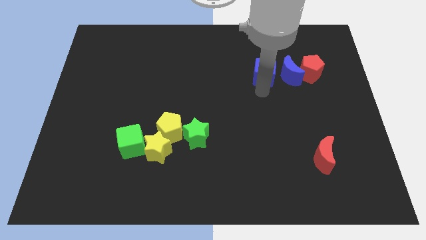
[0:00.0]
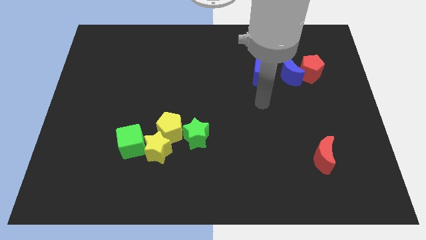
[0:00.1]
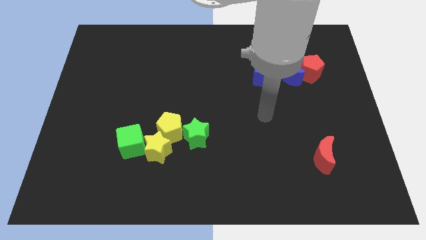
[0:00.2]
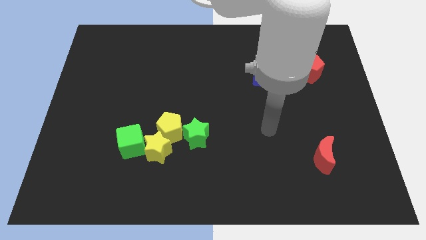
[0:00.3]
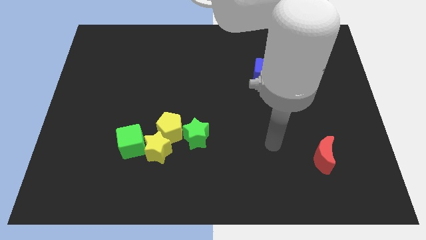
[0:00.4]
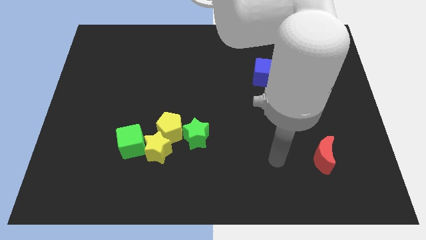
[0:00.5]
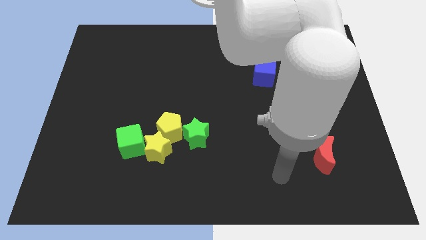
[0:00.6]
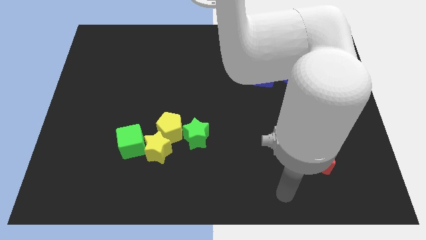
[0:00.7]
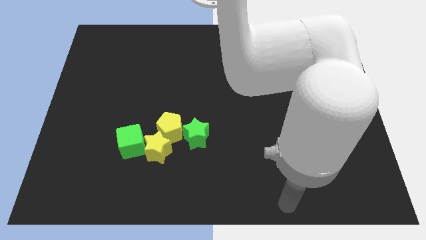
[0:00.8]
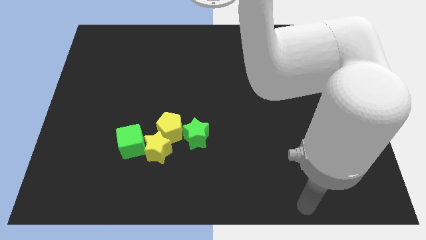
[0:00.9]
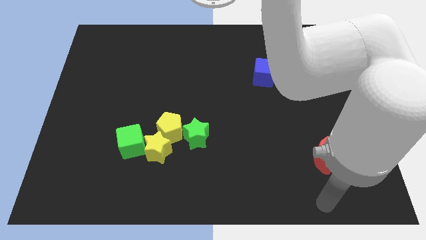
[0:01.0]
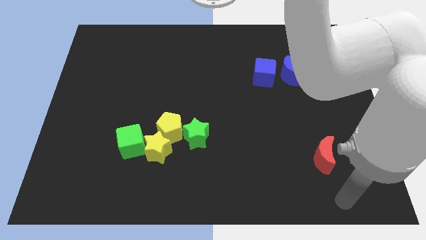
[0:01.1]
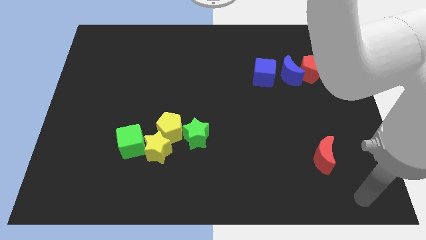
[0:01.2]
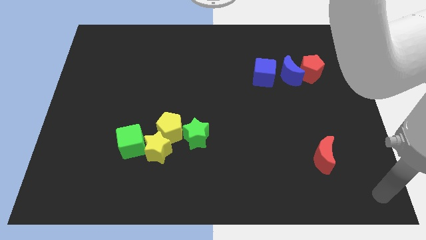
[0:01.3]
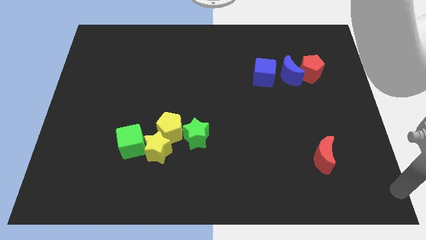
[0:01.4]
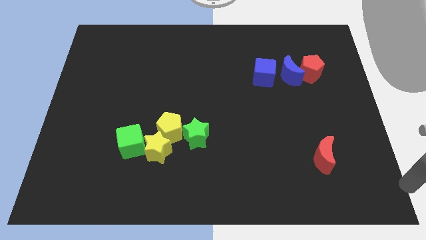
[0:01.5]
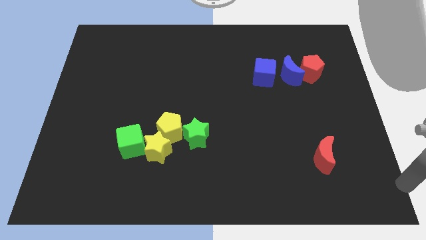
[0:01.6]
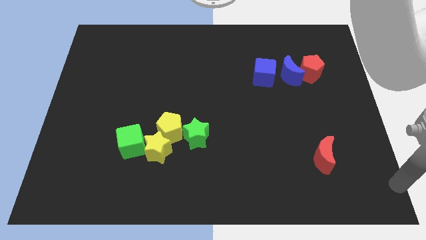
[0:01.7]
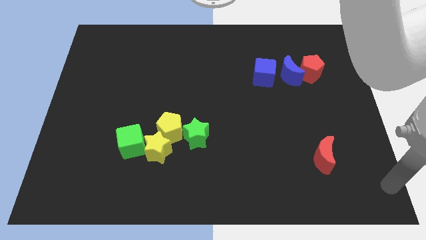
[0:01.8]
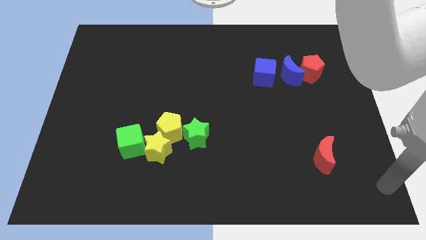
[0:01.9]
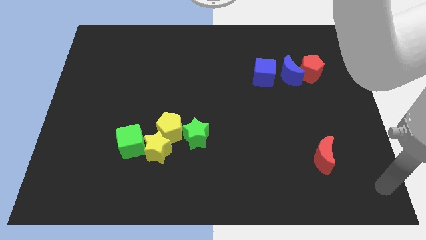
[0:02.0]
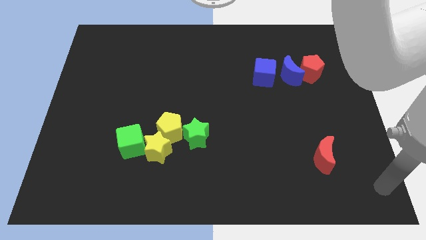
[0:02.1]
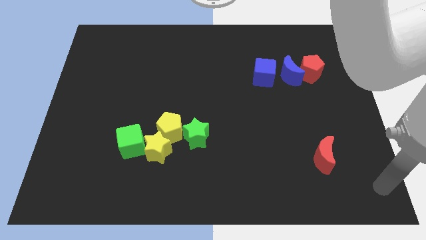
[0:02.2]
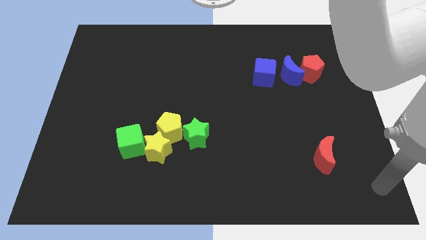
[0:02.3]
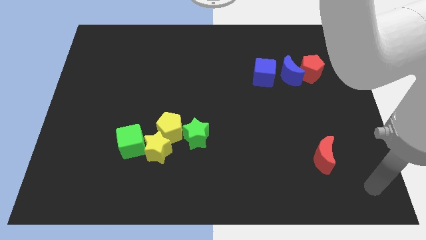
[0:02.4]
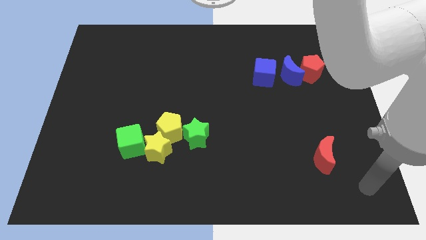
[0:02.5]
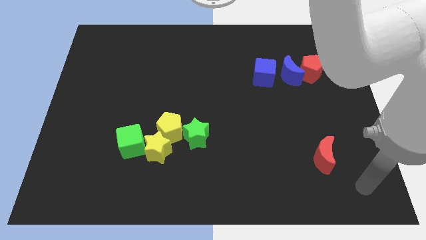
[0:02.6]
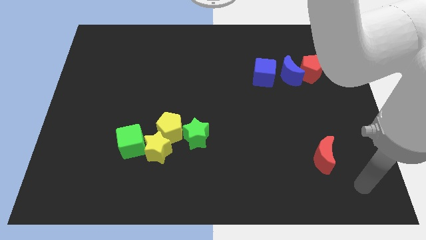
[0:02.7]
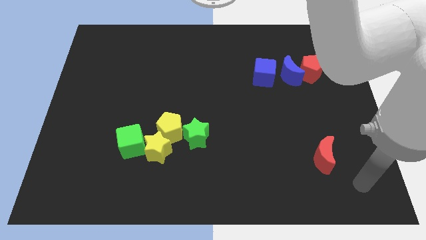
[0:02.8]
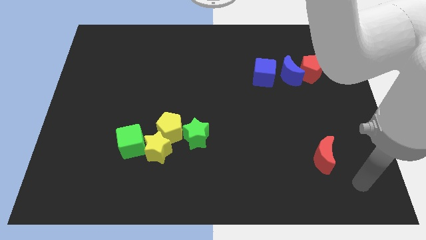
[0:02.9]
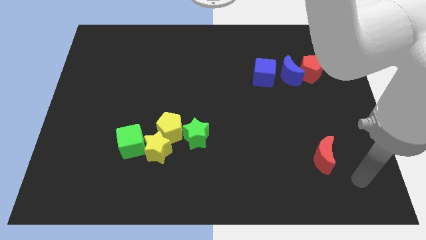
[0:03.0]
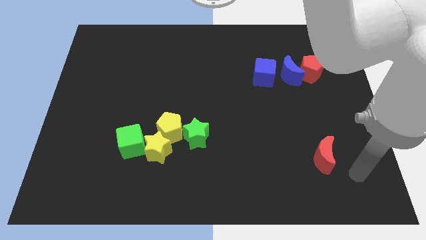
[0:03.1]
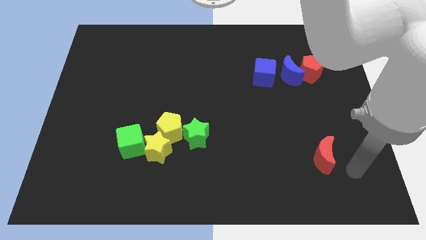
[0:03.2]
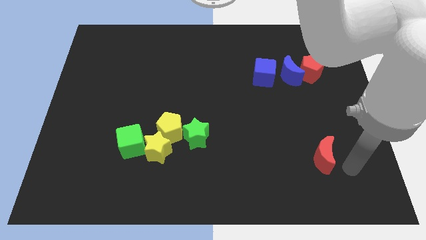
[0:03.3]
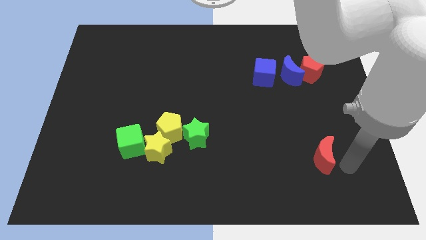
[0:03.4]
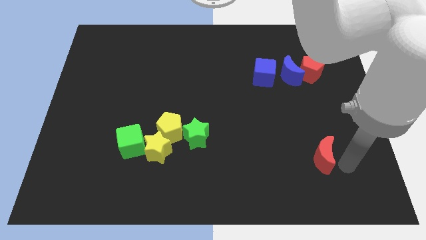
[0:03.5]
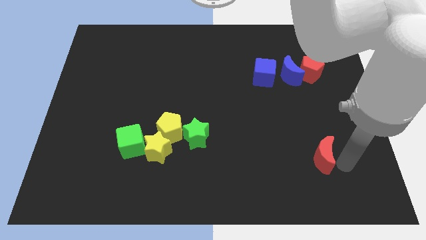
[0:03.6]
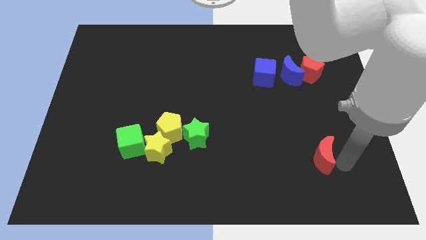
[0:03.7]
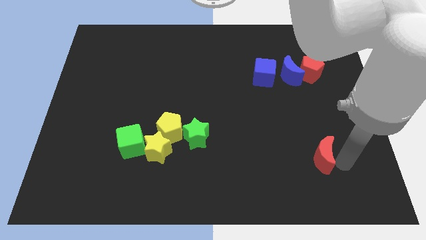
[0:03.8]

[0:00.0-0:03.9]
push your arm towards the red crescent

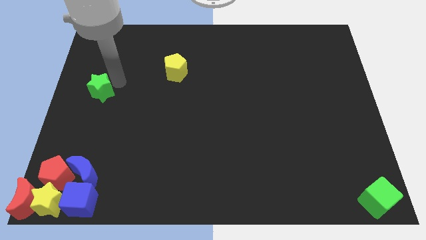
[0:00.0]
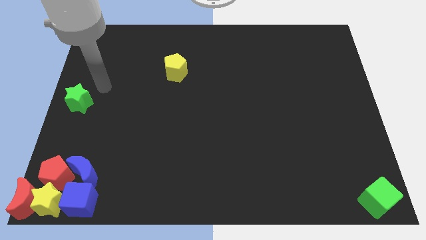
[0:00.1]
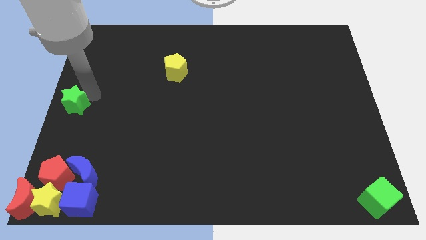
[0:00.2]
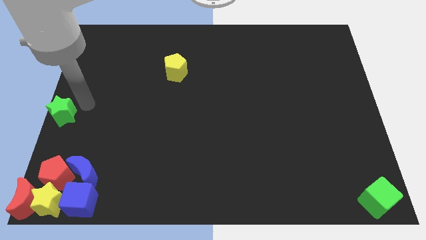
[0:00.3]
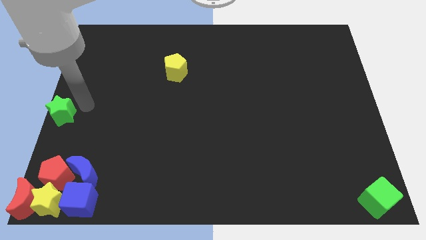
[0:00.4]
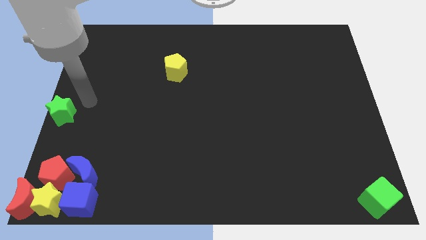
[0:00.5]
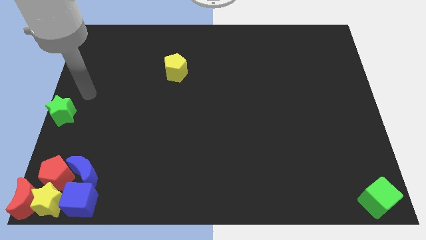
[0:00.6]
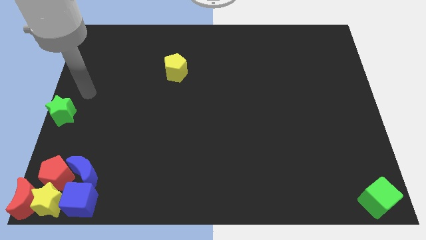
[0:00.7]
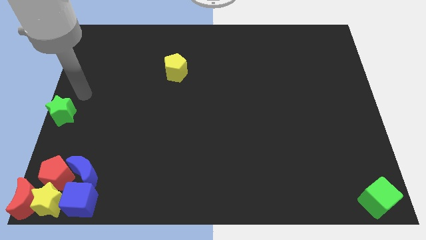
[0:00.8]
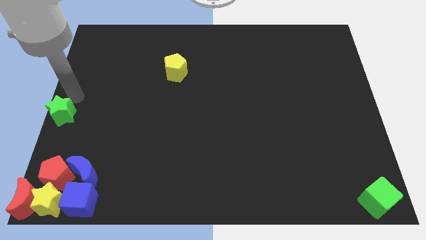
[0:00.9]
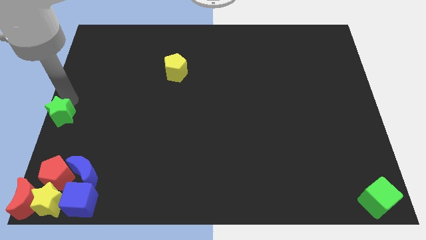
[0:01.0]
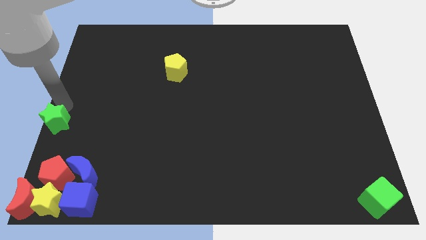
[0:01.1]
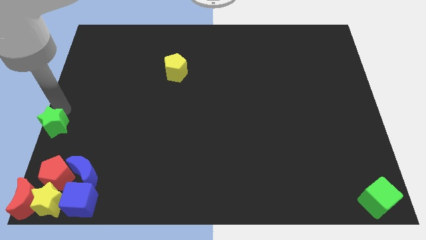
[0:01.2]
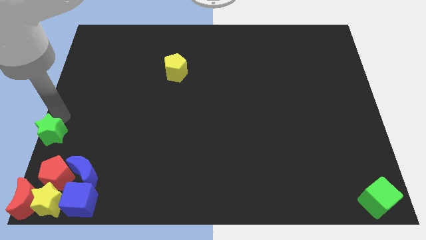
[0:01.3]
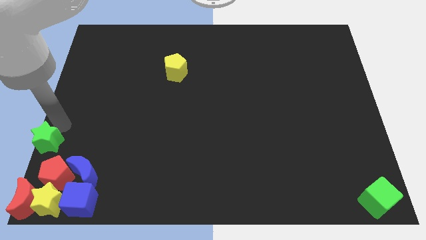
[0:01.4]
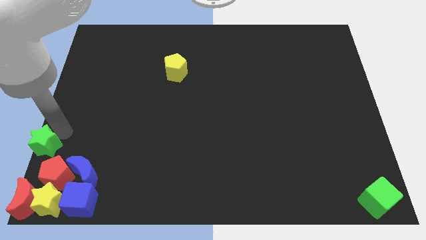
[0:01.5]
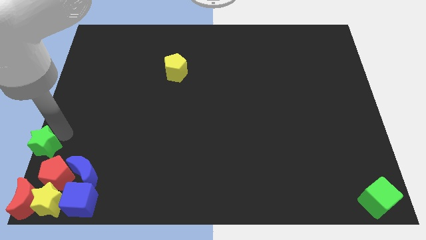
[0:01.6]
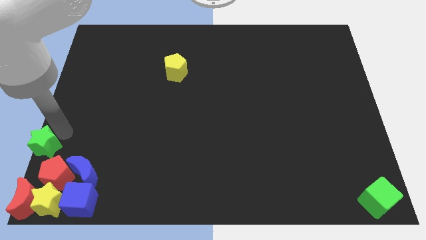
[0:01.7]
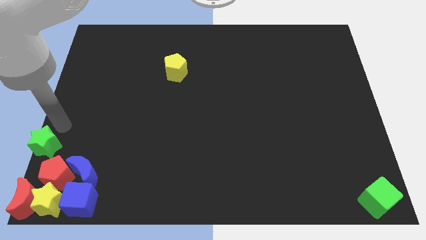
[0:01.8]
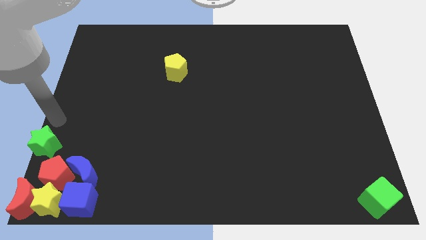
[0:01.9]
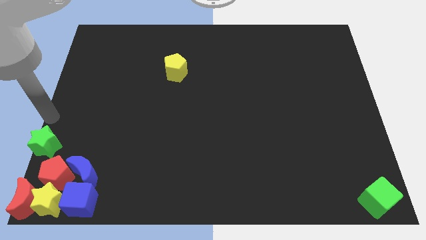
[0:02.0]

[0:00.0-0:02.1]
push the green star towards the red pentagon

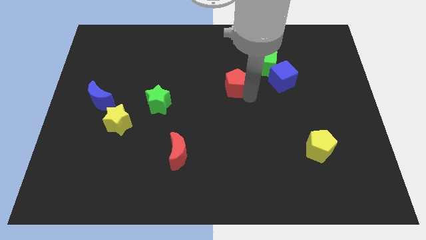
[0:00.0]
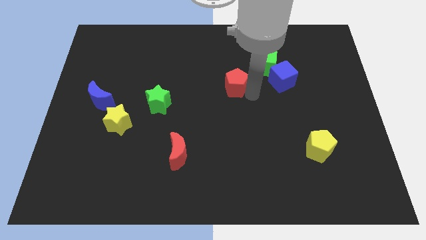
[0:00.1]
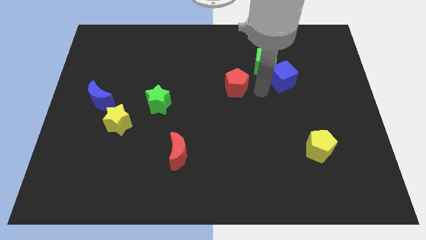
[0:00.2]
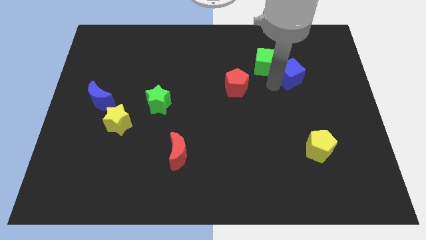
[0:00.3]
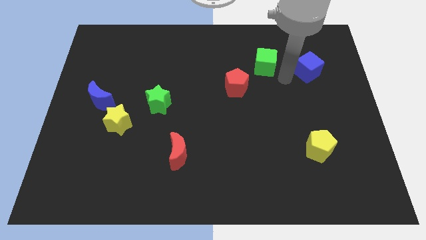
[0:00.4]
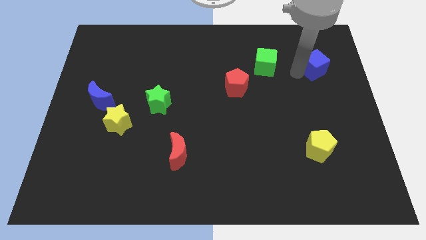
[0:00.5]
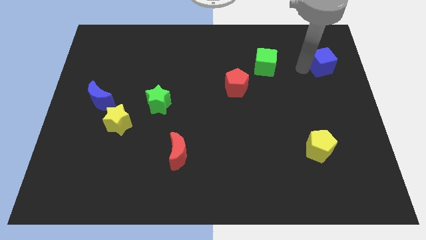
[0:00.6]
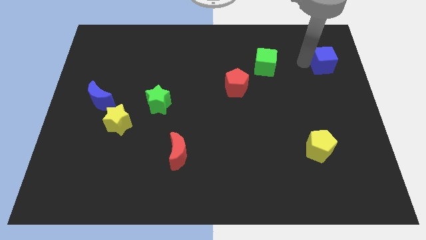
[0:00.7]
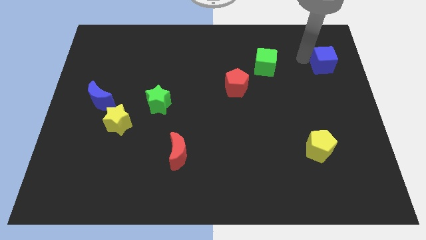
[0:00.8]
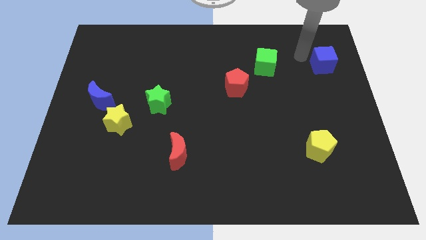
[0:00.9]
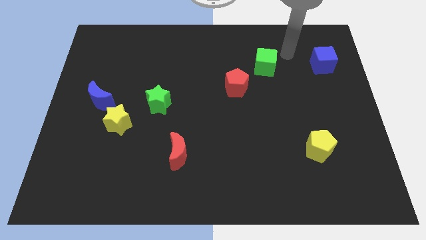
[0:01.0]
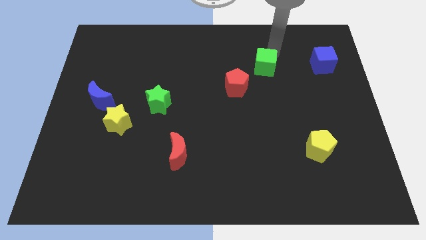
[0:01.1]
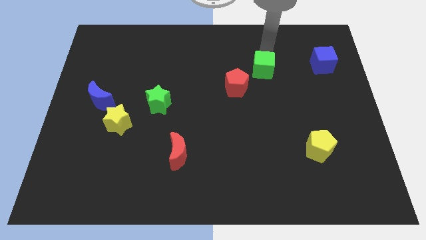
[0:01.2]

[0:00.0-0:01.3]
place the blue cube to the right of the green cube

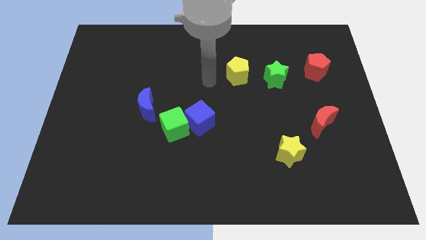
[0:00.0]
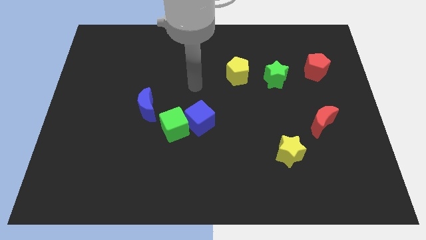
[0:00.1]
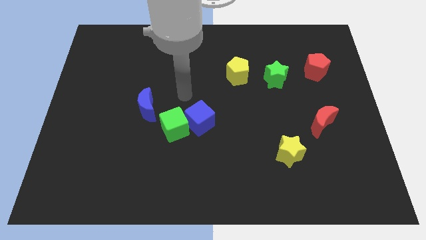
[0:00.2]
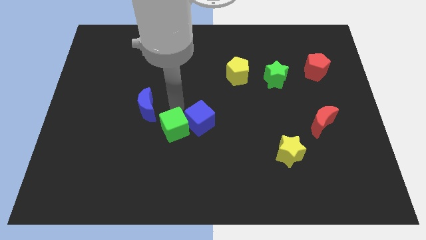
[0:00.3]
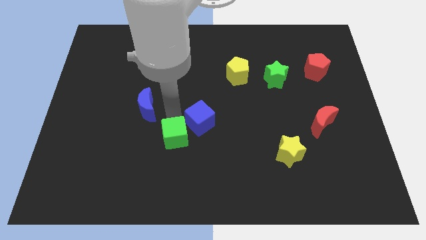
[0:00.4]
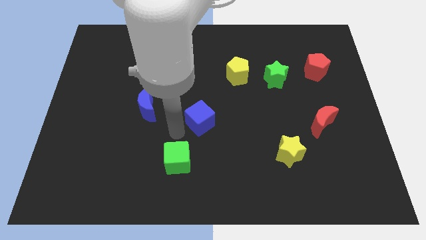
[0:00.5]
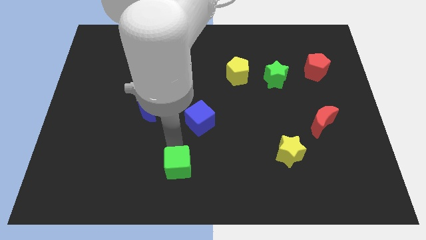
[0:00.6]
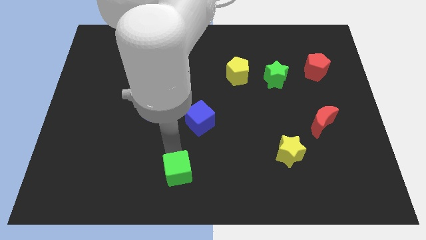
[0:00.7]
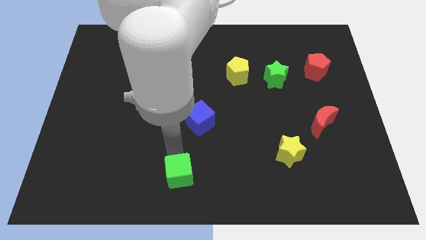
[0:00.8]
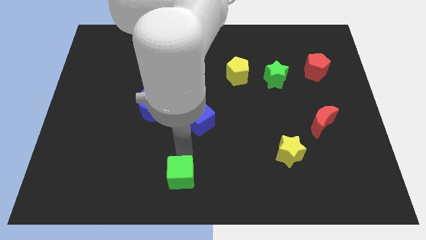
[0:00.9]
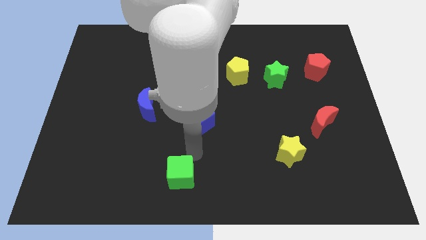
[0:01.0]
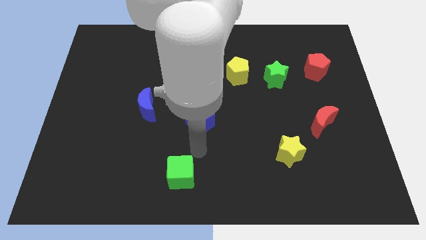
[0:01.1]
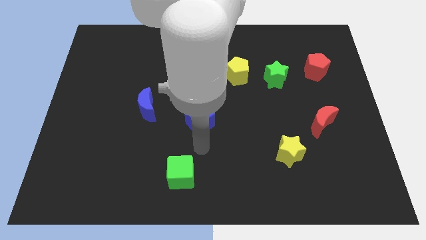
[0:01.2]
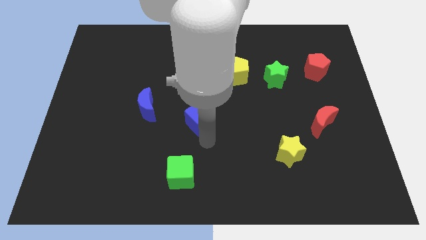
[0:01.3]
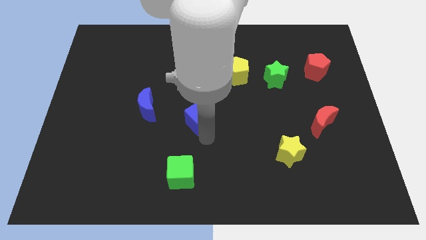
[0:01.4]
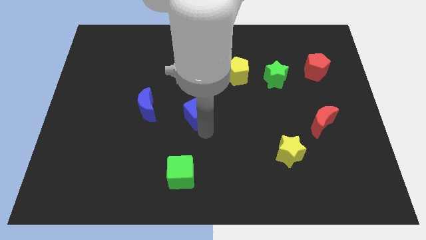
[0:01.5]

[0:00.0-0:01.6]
push the green cube to wards the bottom center
